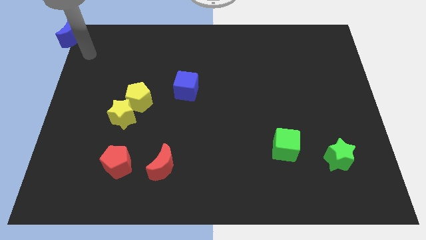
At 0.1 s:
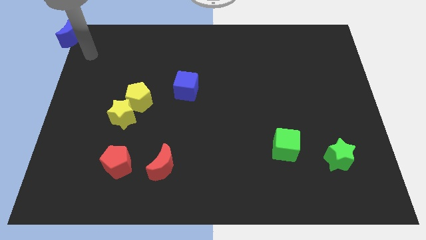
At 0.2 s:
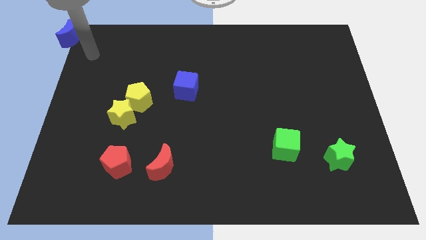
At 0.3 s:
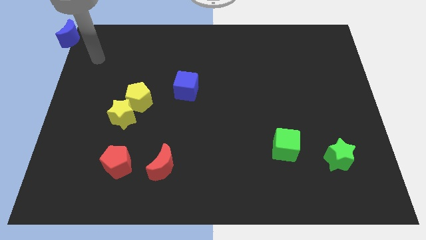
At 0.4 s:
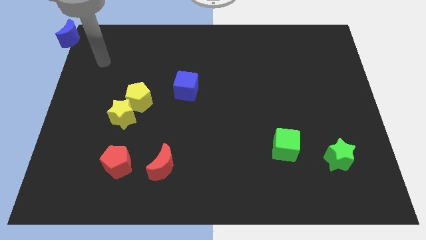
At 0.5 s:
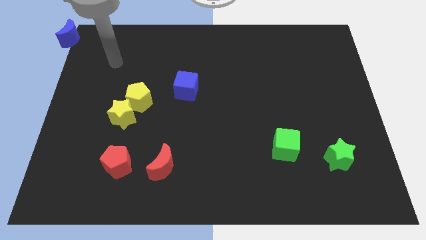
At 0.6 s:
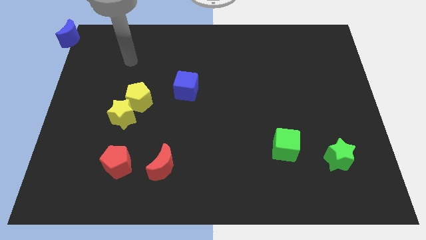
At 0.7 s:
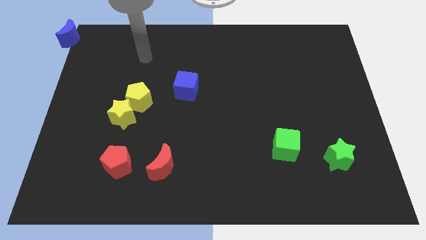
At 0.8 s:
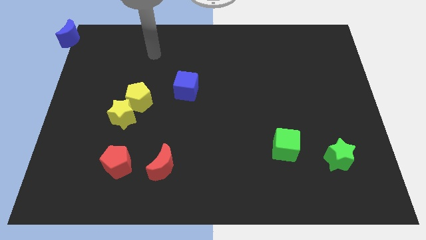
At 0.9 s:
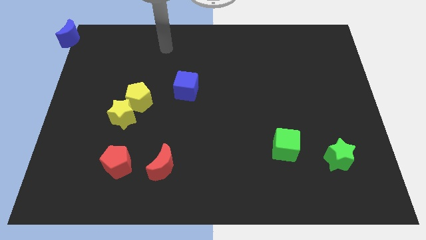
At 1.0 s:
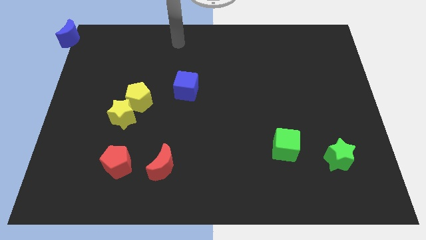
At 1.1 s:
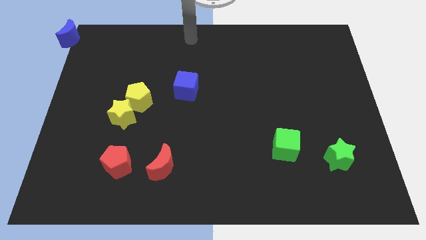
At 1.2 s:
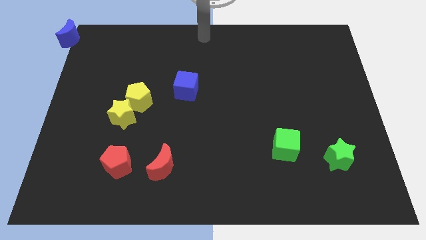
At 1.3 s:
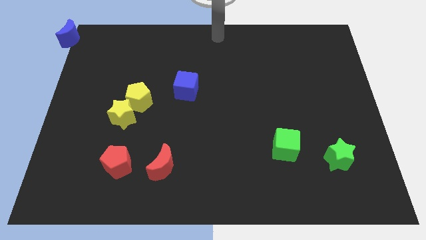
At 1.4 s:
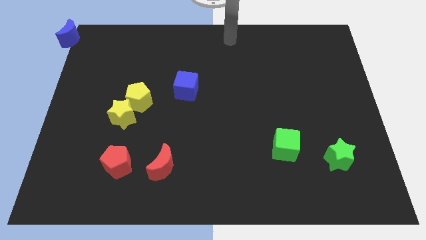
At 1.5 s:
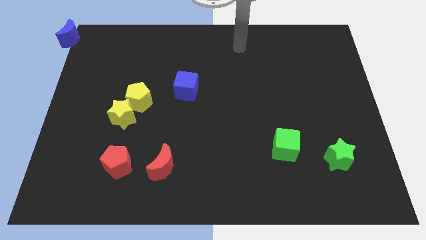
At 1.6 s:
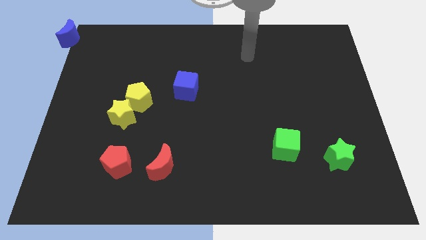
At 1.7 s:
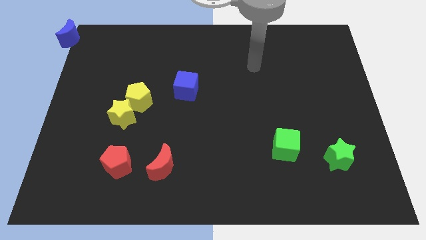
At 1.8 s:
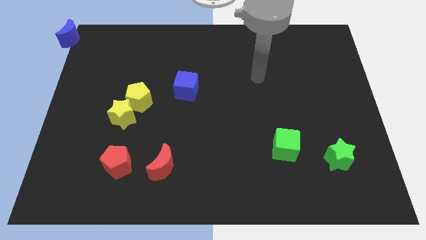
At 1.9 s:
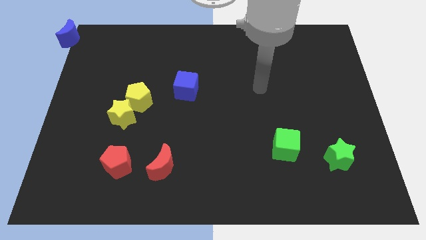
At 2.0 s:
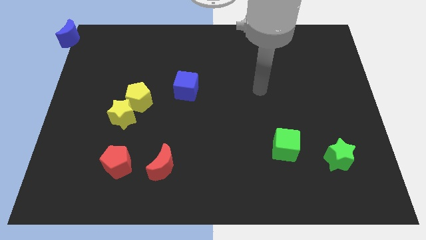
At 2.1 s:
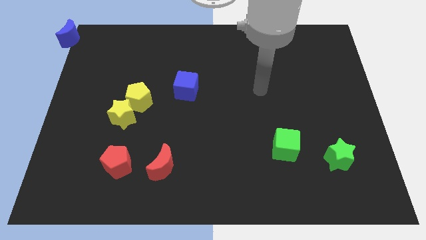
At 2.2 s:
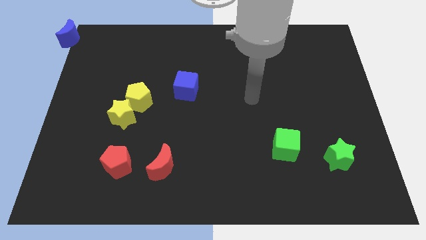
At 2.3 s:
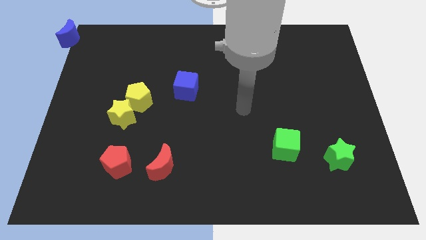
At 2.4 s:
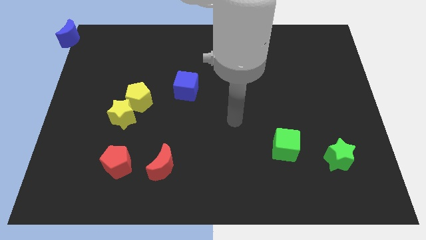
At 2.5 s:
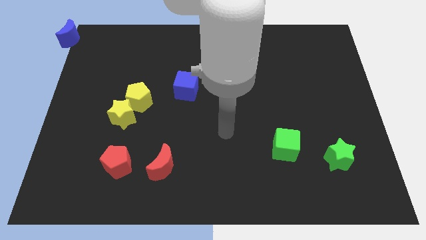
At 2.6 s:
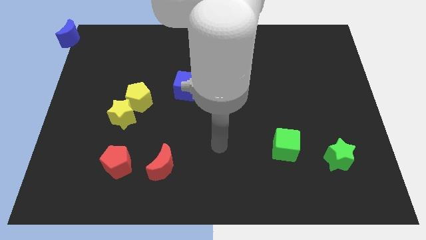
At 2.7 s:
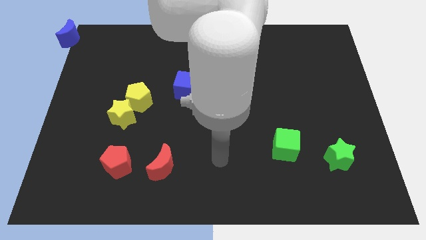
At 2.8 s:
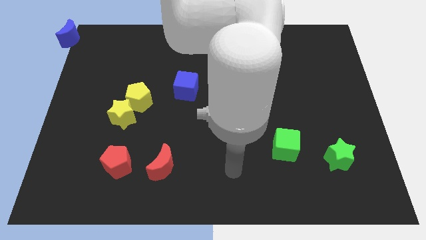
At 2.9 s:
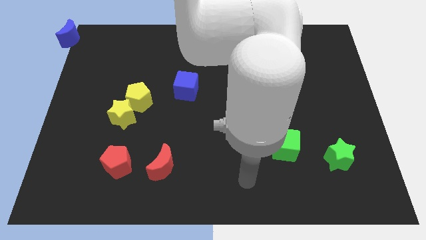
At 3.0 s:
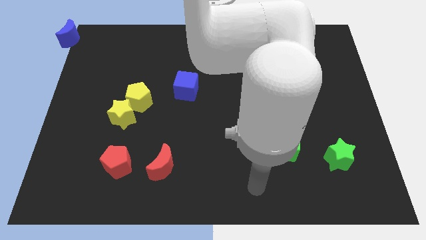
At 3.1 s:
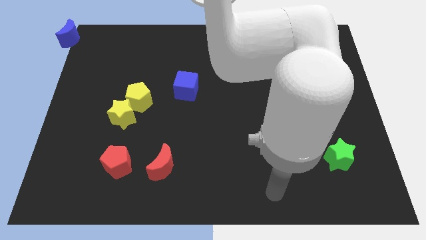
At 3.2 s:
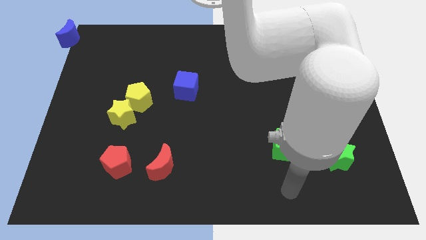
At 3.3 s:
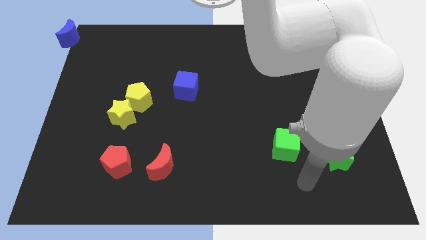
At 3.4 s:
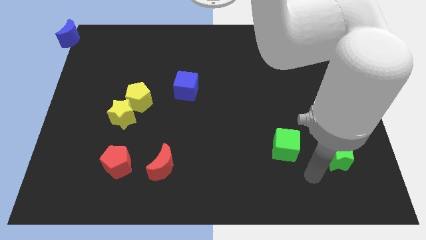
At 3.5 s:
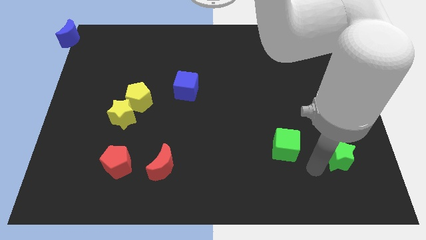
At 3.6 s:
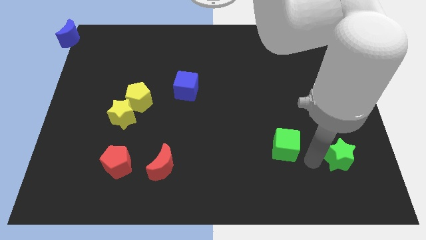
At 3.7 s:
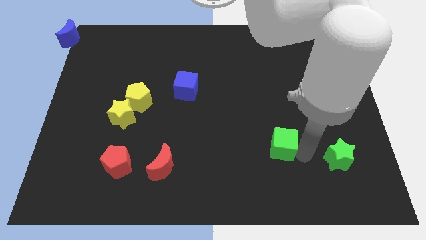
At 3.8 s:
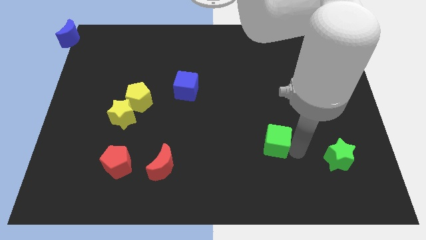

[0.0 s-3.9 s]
move your arm to the right of green cube

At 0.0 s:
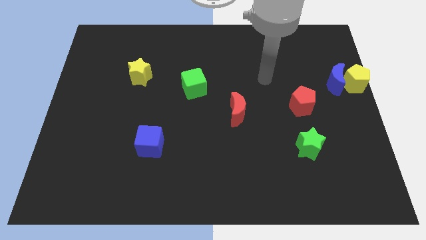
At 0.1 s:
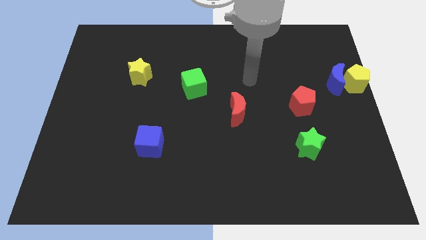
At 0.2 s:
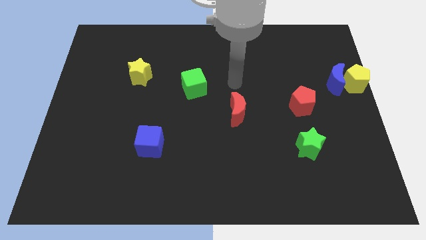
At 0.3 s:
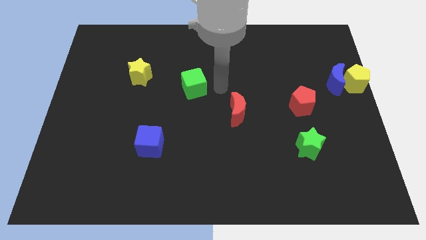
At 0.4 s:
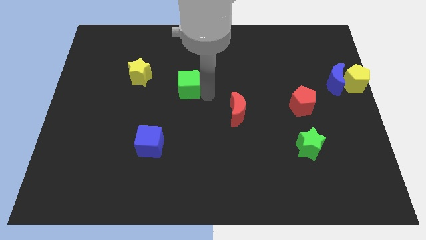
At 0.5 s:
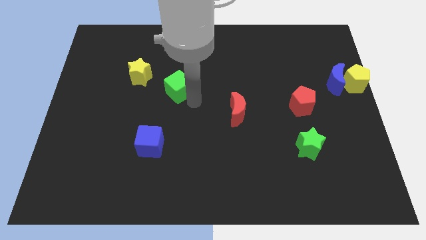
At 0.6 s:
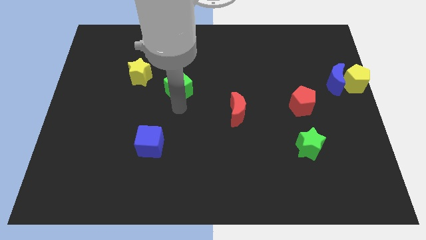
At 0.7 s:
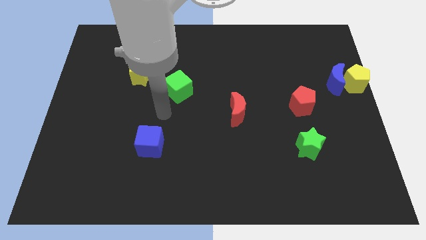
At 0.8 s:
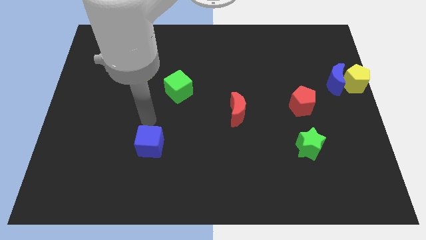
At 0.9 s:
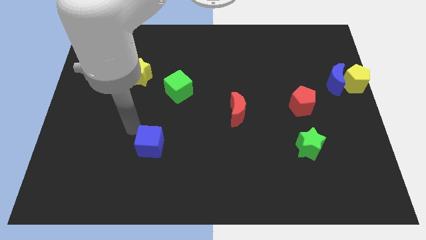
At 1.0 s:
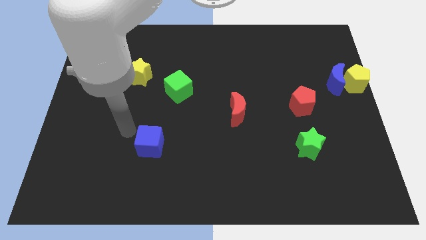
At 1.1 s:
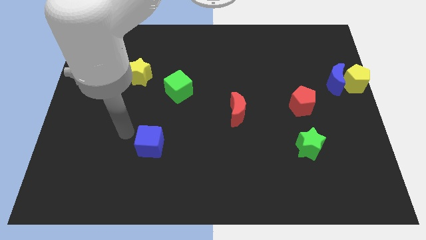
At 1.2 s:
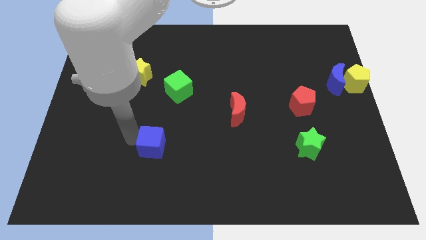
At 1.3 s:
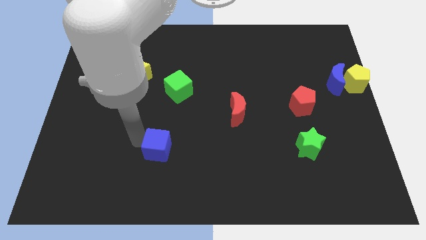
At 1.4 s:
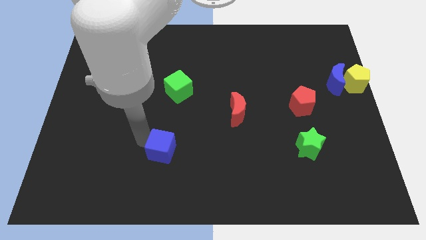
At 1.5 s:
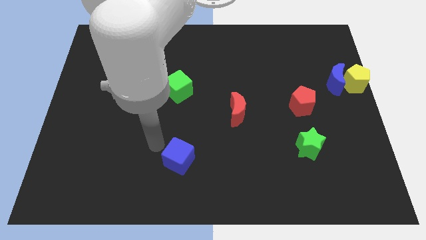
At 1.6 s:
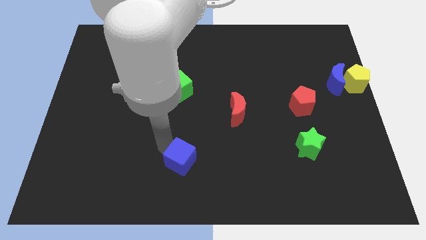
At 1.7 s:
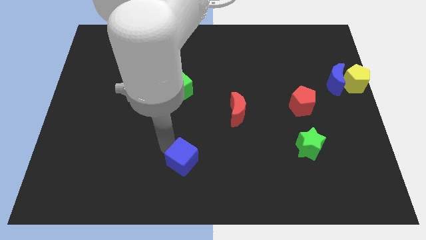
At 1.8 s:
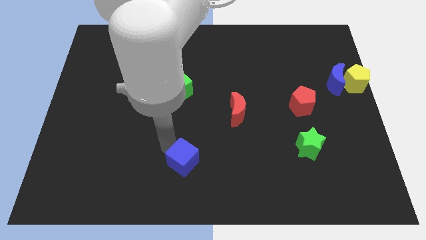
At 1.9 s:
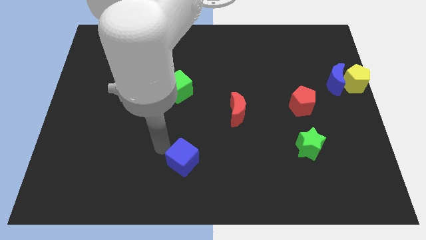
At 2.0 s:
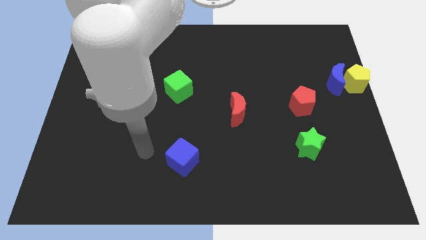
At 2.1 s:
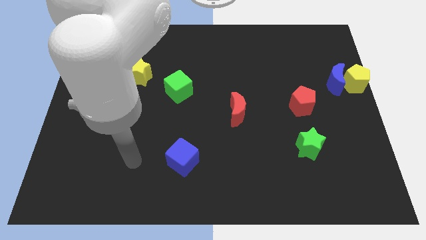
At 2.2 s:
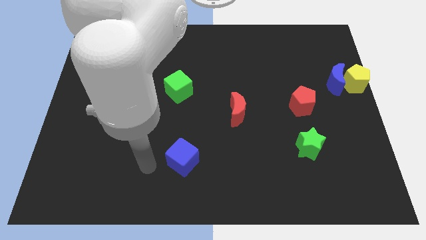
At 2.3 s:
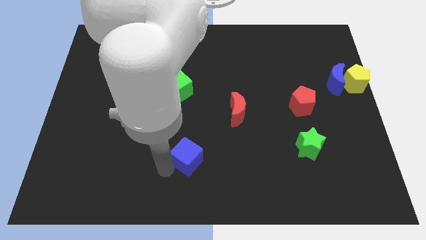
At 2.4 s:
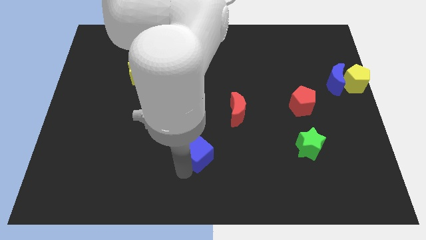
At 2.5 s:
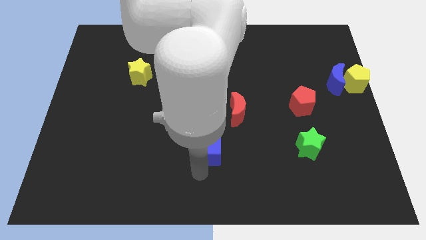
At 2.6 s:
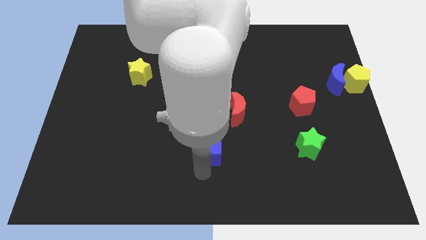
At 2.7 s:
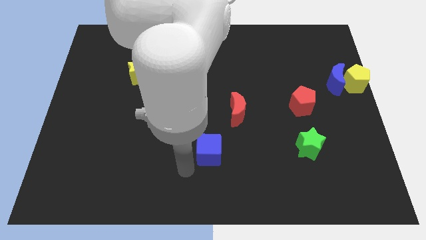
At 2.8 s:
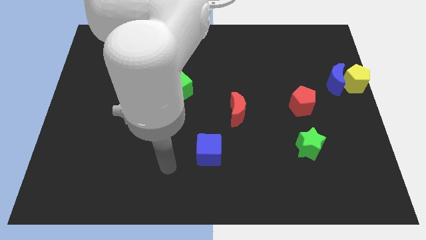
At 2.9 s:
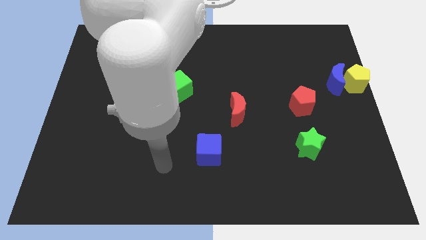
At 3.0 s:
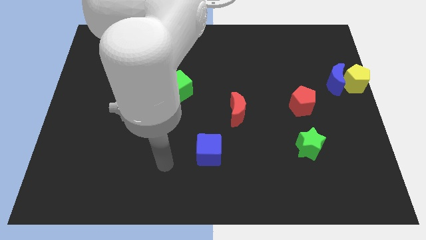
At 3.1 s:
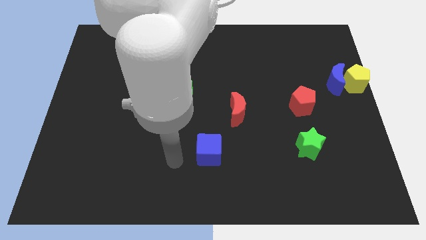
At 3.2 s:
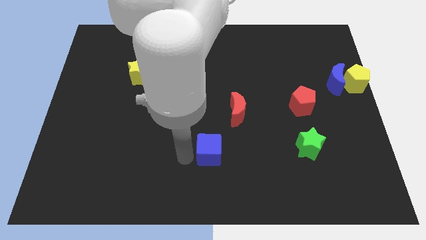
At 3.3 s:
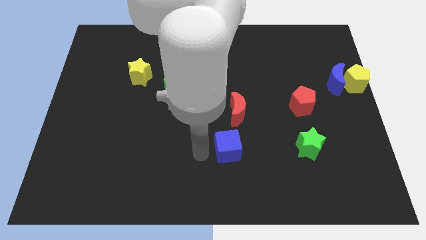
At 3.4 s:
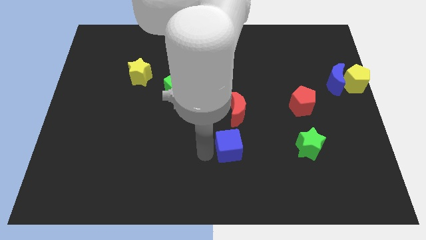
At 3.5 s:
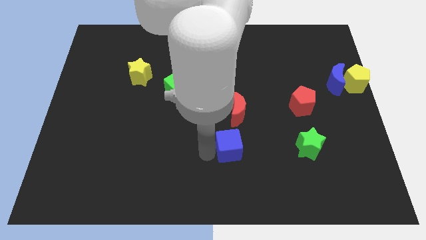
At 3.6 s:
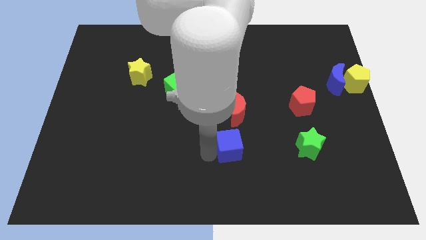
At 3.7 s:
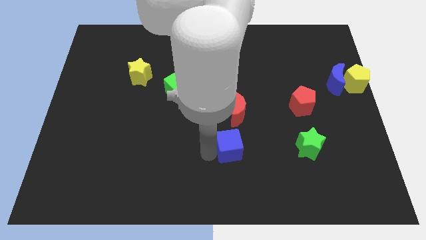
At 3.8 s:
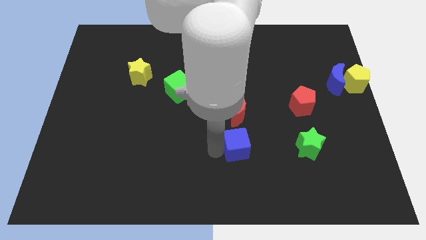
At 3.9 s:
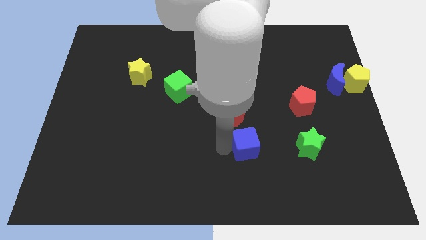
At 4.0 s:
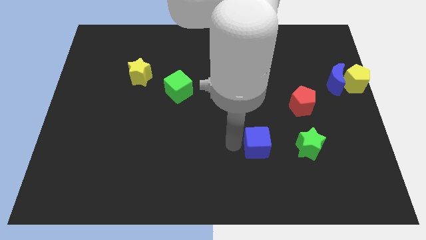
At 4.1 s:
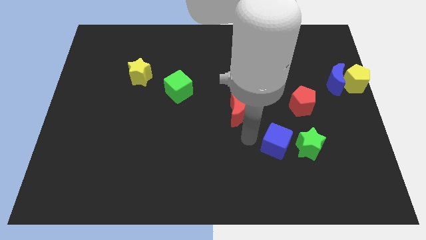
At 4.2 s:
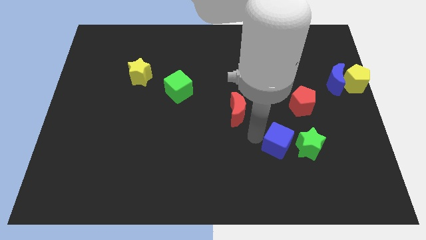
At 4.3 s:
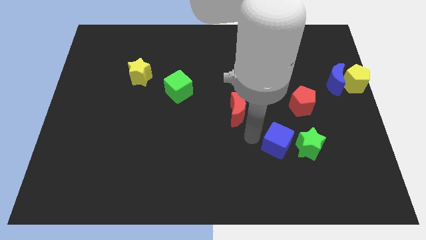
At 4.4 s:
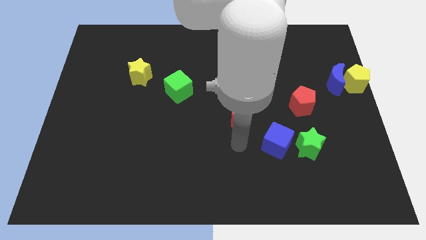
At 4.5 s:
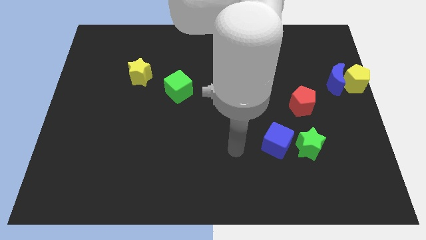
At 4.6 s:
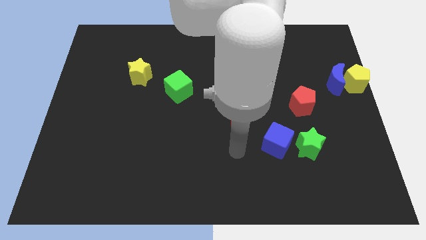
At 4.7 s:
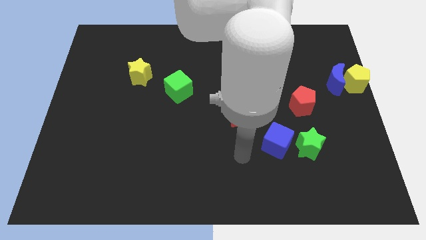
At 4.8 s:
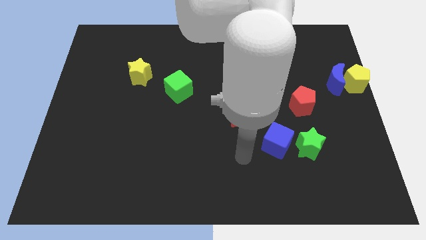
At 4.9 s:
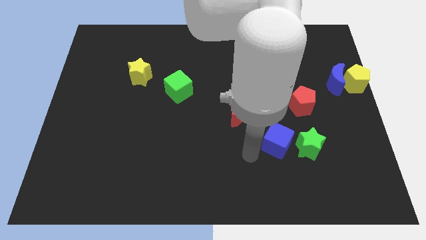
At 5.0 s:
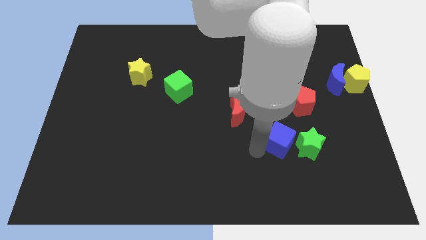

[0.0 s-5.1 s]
place the blue cube close to green star
